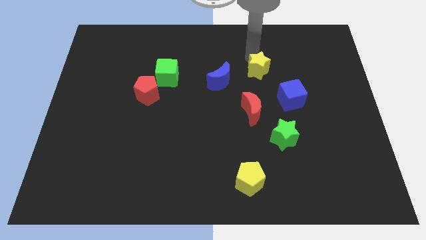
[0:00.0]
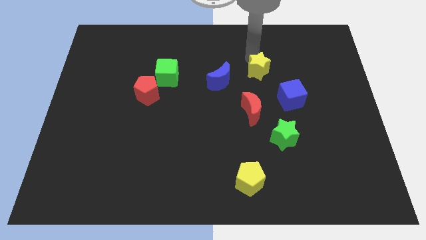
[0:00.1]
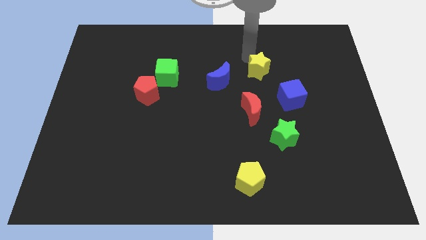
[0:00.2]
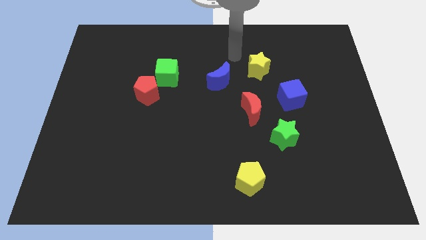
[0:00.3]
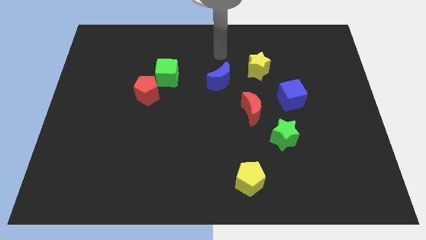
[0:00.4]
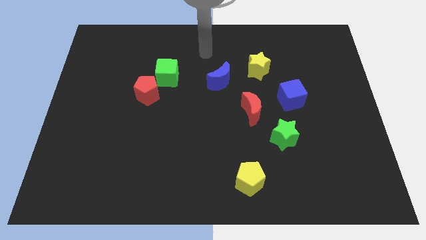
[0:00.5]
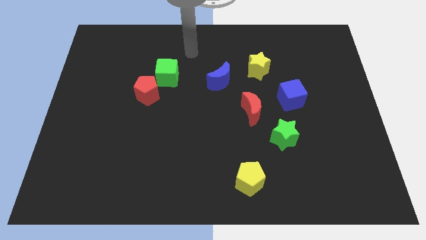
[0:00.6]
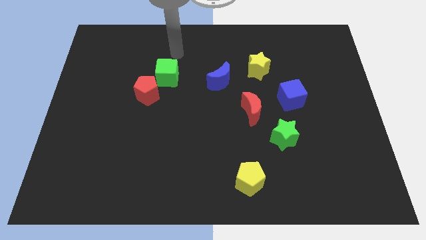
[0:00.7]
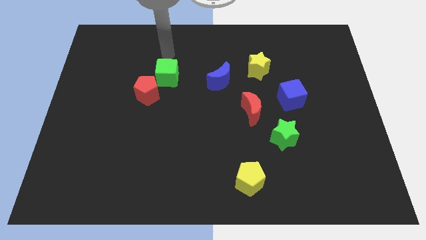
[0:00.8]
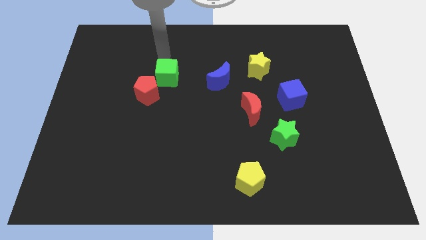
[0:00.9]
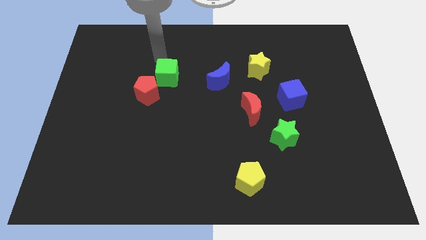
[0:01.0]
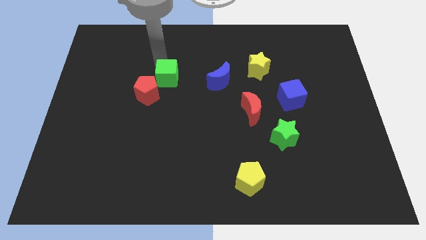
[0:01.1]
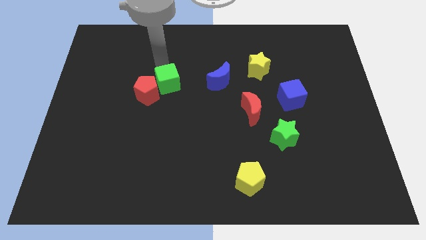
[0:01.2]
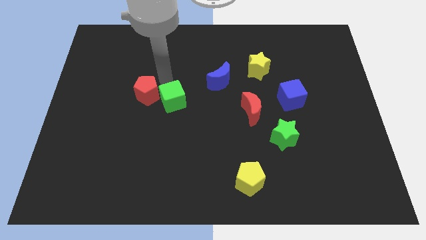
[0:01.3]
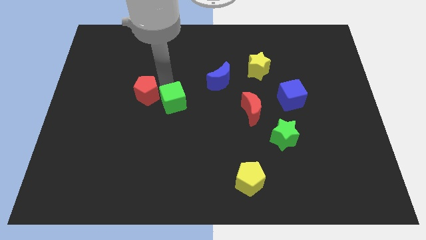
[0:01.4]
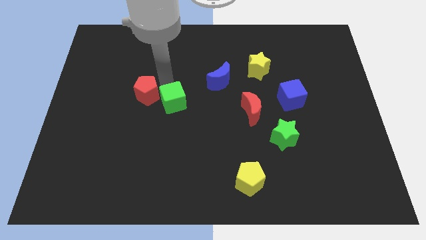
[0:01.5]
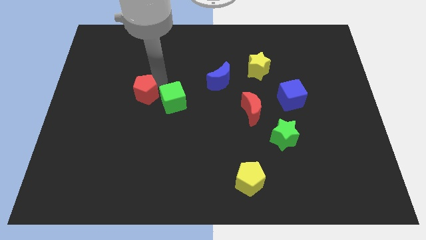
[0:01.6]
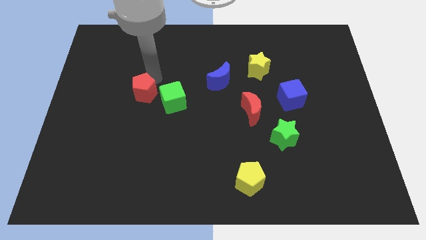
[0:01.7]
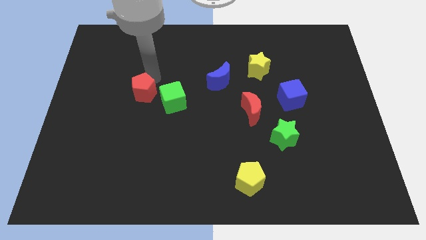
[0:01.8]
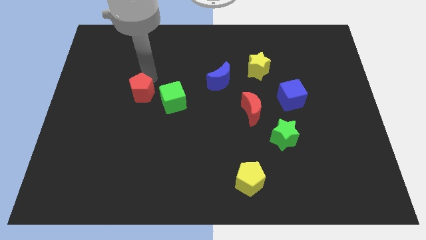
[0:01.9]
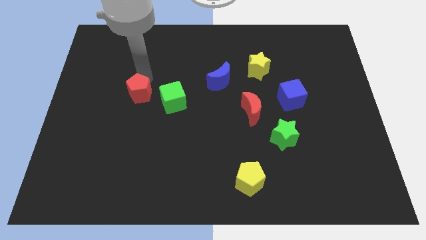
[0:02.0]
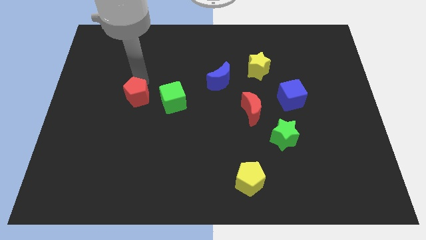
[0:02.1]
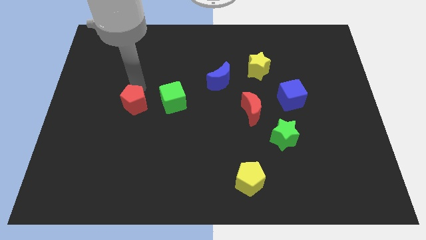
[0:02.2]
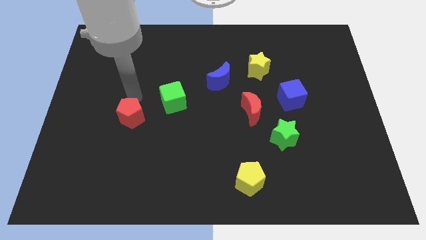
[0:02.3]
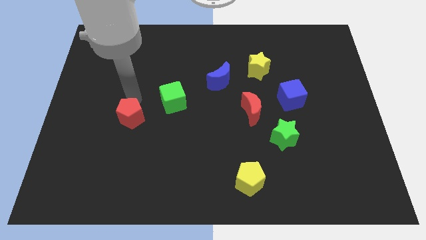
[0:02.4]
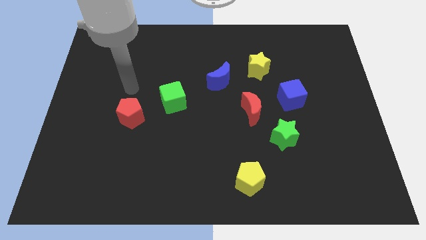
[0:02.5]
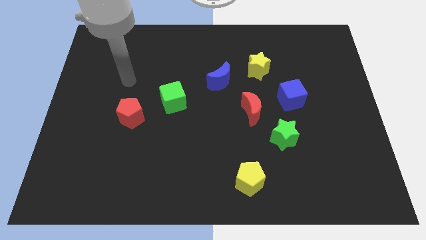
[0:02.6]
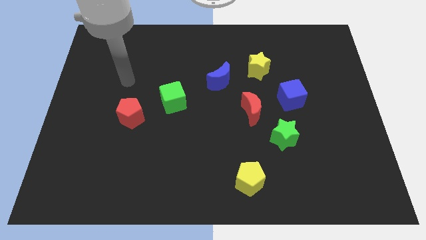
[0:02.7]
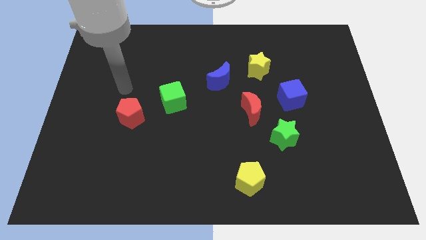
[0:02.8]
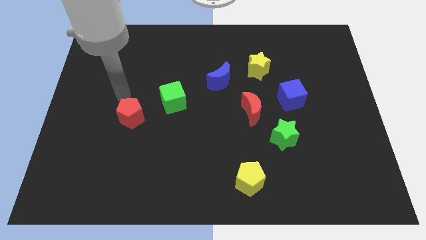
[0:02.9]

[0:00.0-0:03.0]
place the green cube and red pentagon in a diagonal line at the bottom left of the blue moon

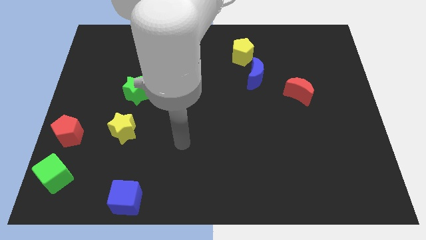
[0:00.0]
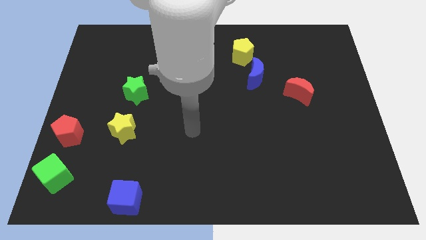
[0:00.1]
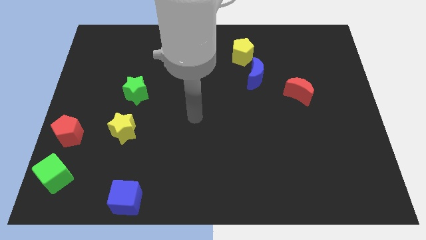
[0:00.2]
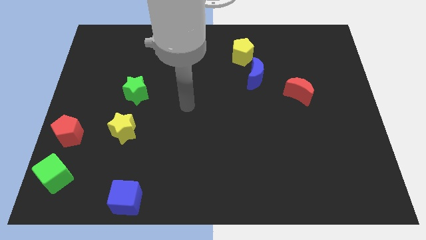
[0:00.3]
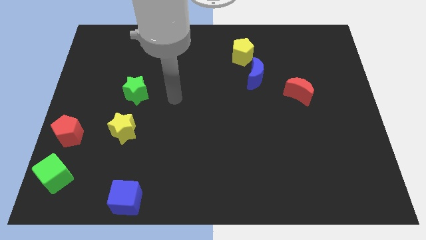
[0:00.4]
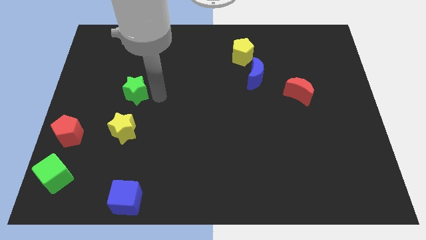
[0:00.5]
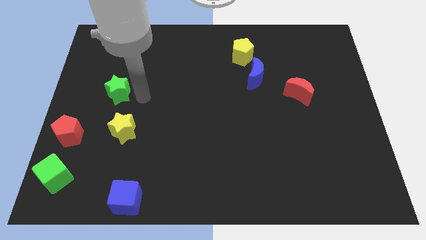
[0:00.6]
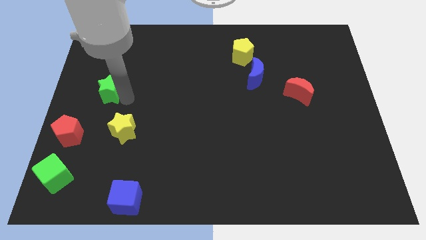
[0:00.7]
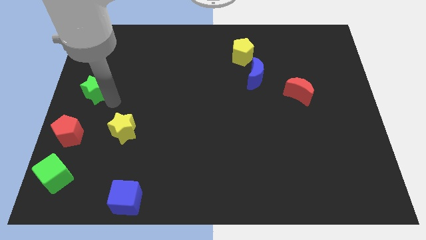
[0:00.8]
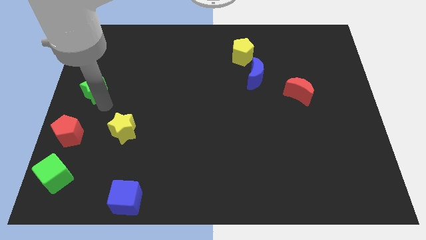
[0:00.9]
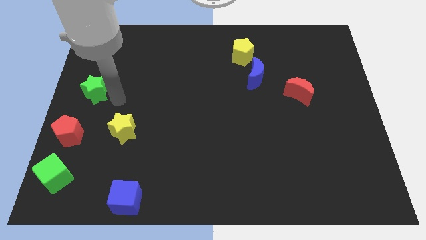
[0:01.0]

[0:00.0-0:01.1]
move the green star to the top left of the yellow star

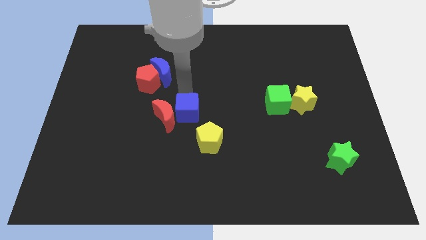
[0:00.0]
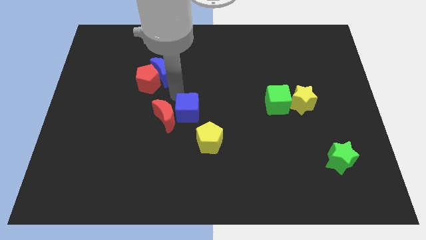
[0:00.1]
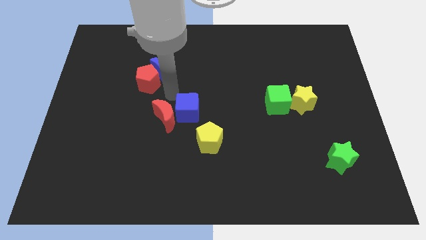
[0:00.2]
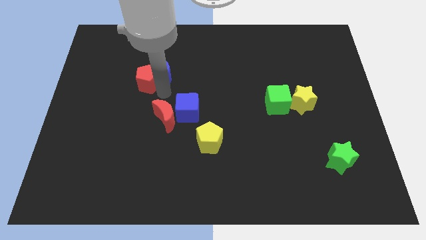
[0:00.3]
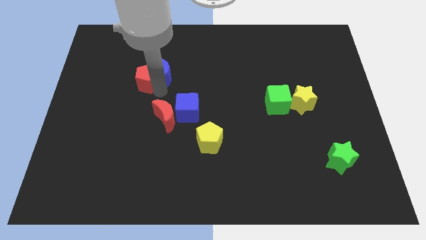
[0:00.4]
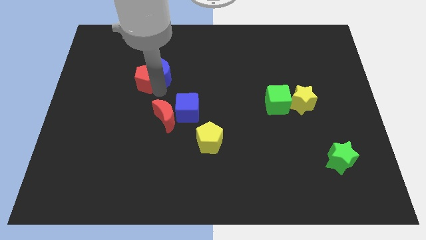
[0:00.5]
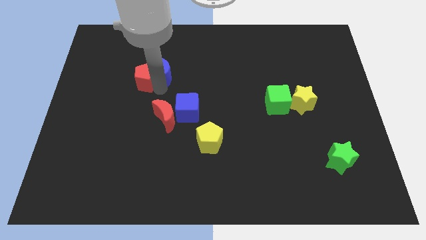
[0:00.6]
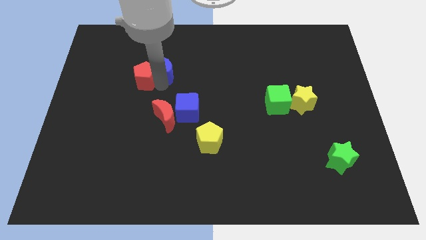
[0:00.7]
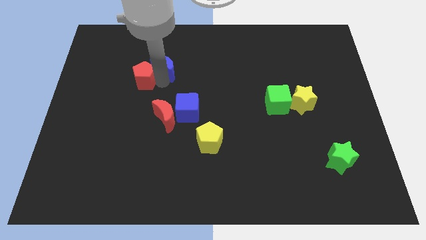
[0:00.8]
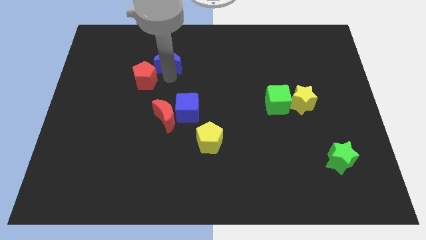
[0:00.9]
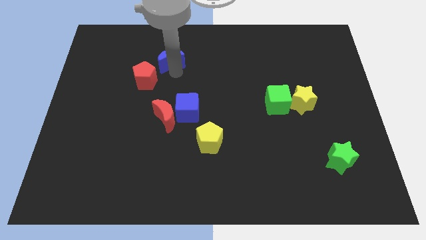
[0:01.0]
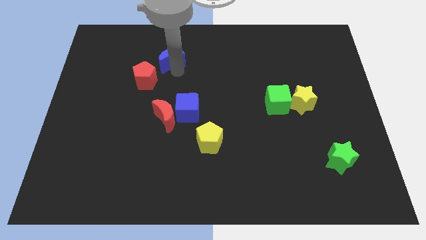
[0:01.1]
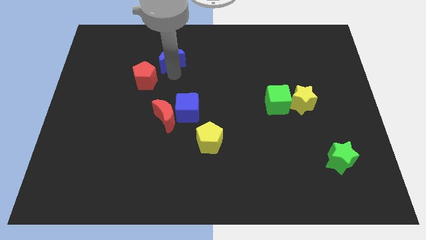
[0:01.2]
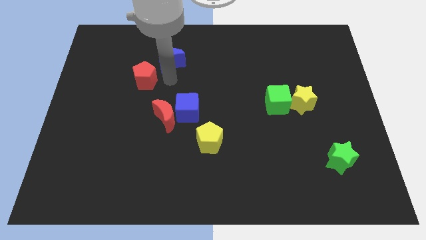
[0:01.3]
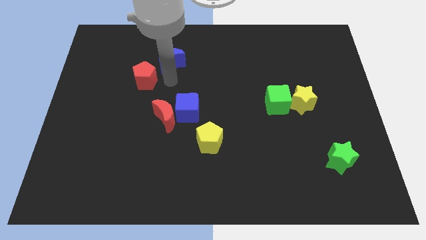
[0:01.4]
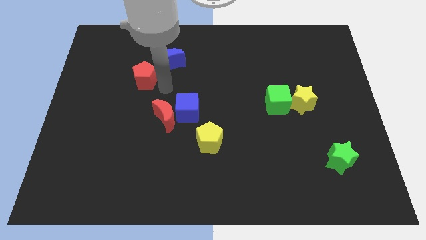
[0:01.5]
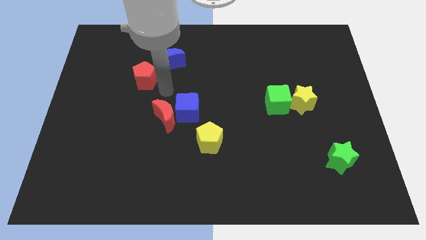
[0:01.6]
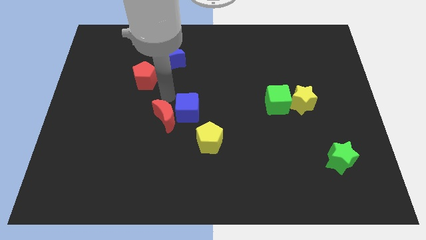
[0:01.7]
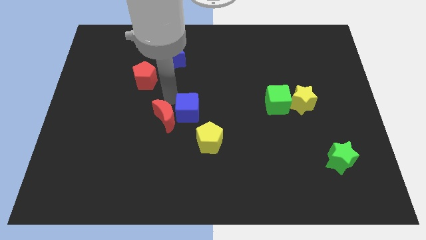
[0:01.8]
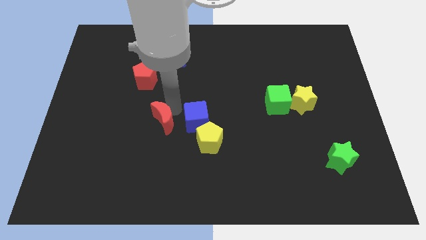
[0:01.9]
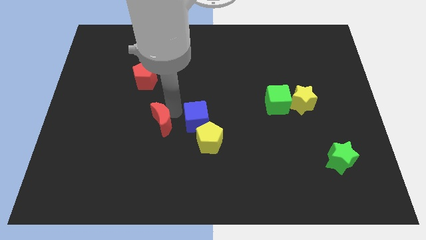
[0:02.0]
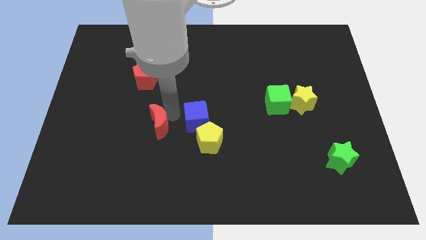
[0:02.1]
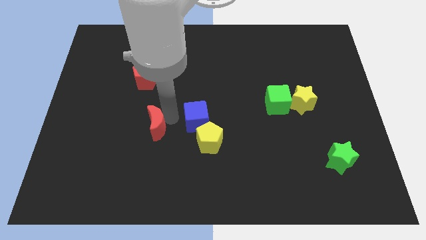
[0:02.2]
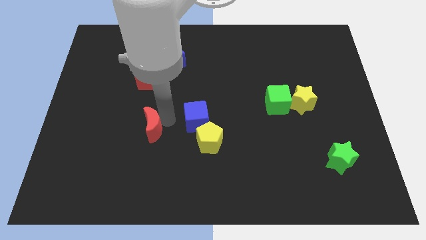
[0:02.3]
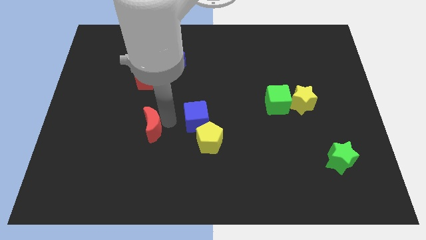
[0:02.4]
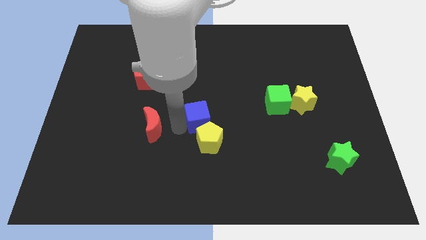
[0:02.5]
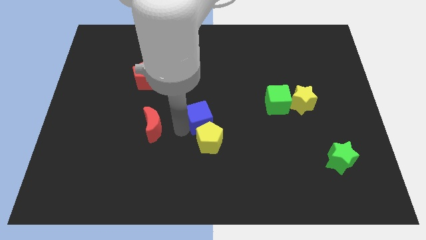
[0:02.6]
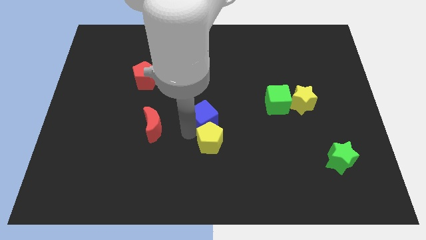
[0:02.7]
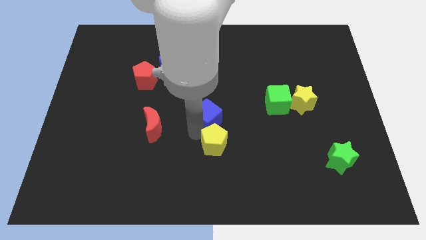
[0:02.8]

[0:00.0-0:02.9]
push blue cube above yellow pentagon

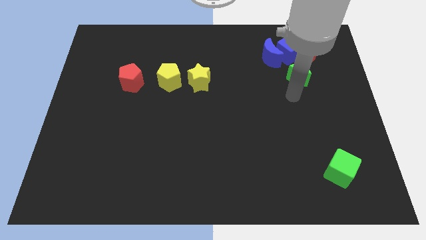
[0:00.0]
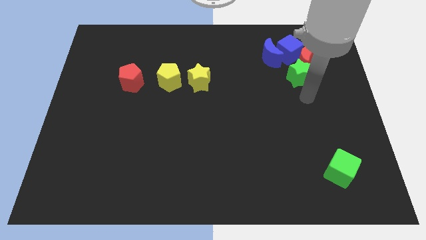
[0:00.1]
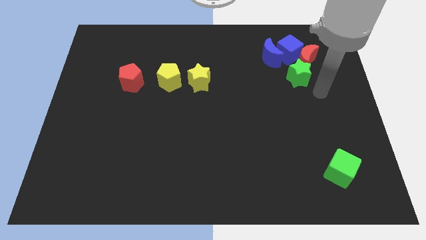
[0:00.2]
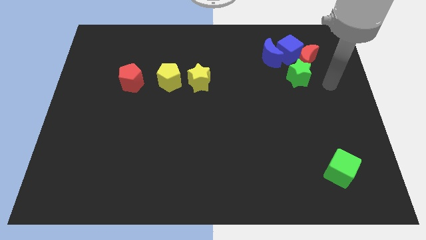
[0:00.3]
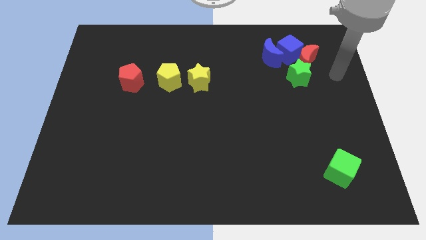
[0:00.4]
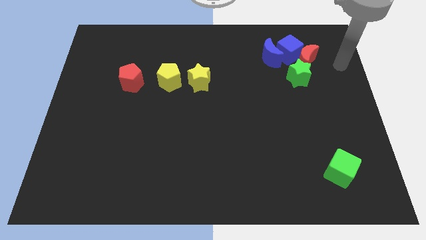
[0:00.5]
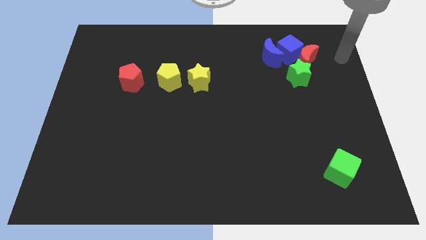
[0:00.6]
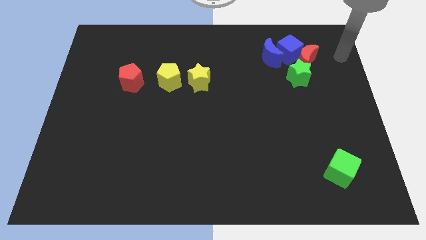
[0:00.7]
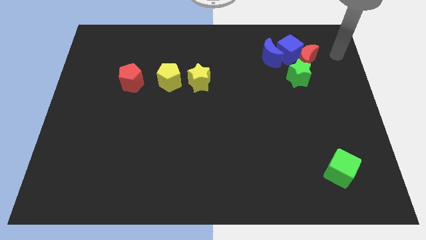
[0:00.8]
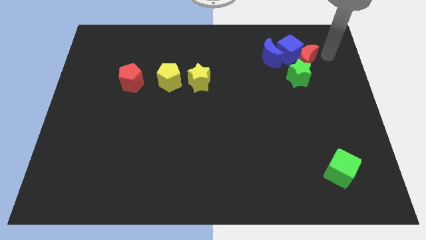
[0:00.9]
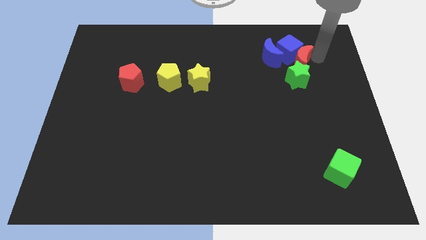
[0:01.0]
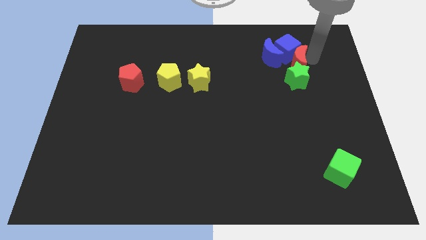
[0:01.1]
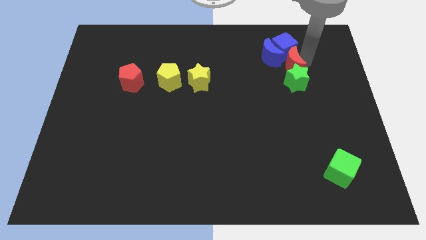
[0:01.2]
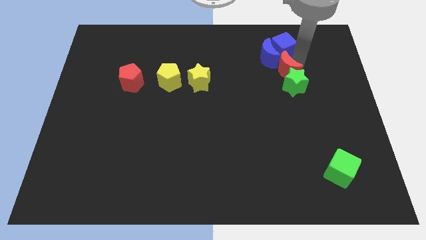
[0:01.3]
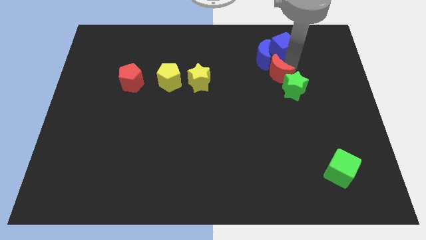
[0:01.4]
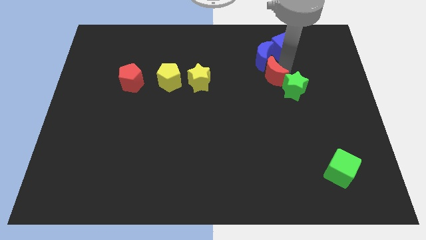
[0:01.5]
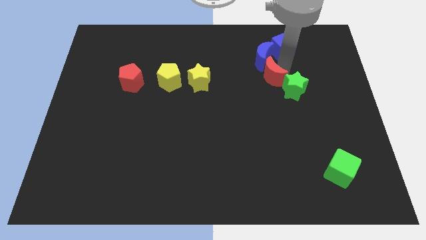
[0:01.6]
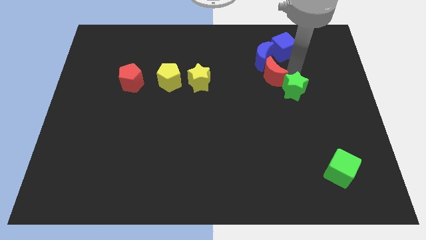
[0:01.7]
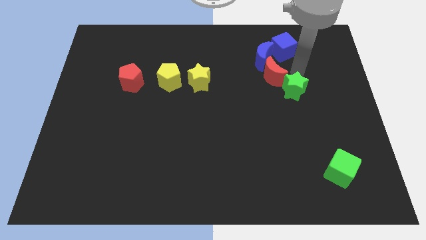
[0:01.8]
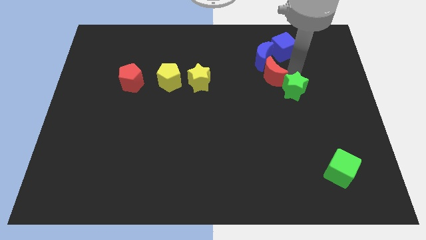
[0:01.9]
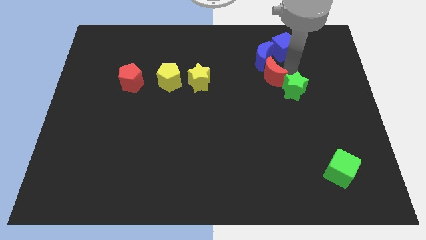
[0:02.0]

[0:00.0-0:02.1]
place the red crescent diagonally in between the blue moon and green star
